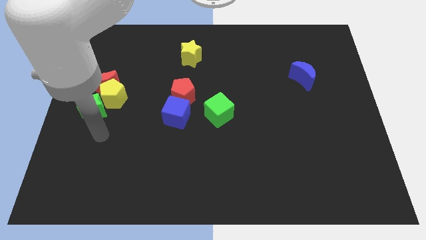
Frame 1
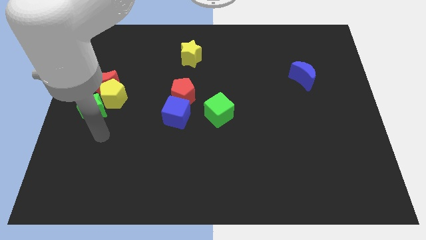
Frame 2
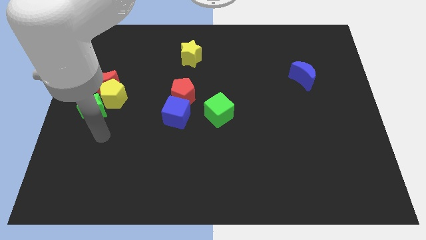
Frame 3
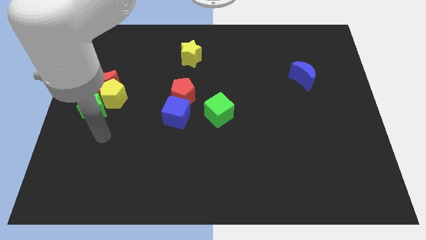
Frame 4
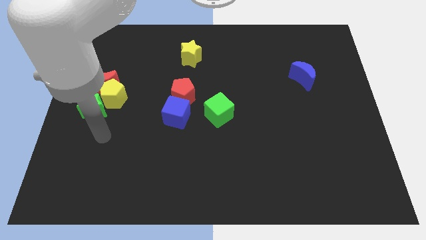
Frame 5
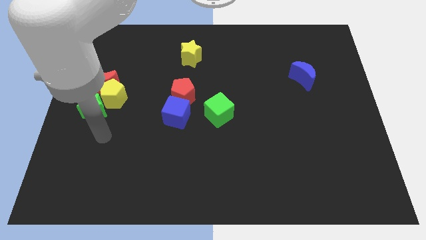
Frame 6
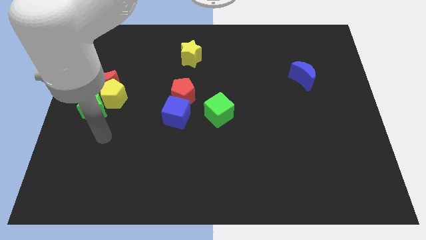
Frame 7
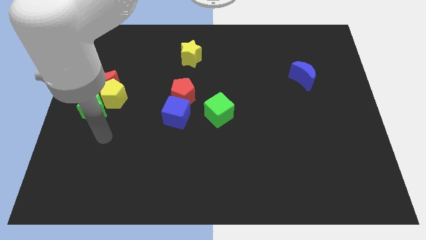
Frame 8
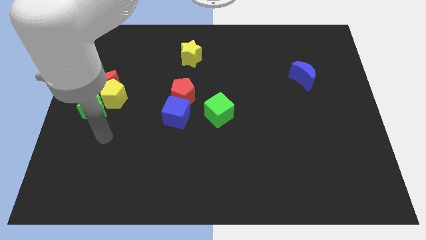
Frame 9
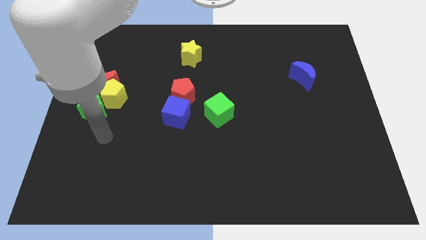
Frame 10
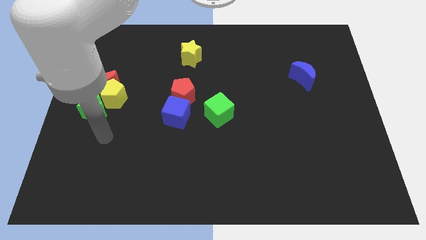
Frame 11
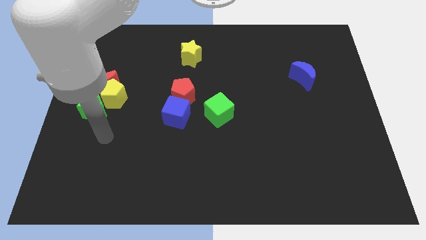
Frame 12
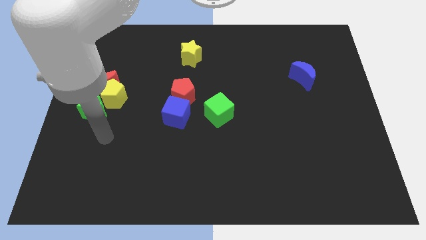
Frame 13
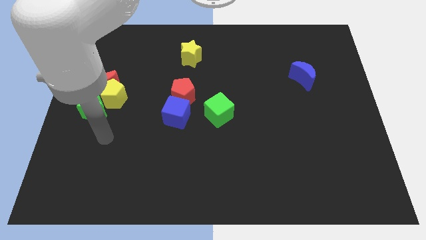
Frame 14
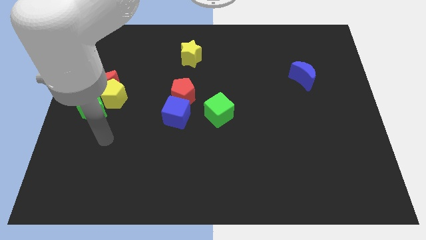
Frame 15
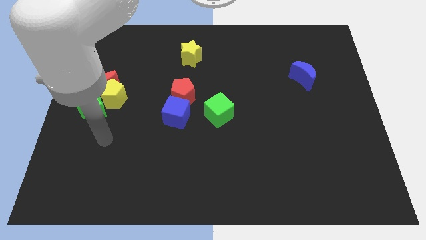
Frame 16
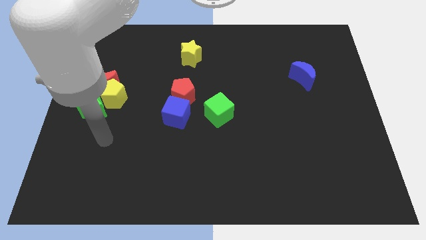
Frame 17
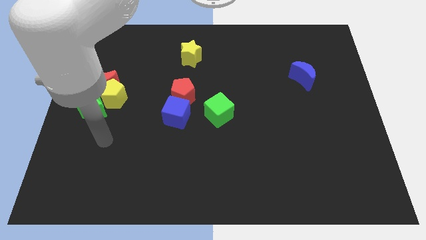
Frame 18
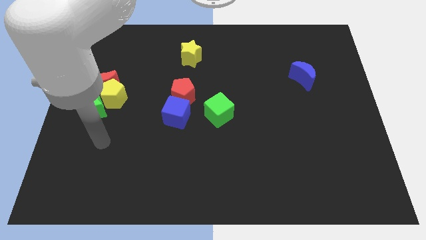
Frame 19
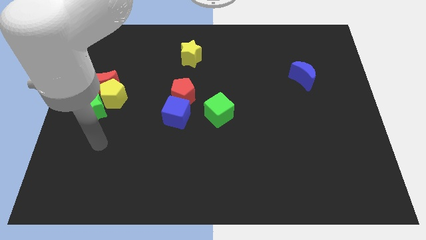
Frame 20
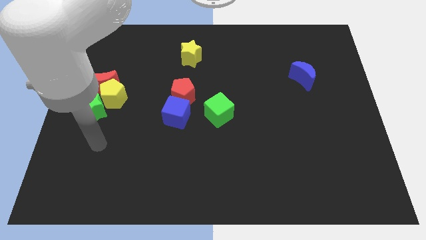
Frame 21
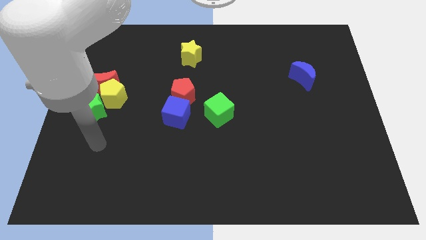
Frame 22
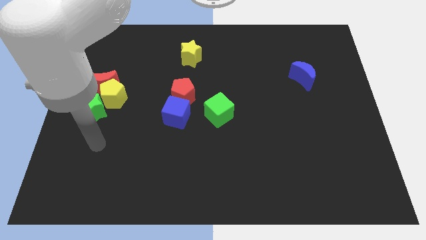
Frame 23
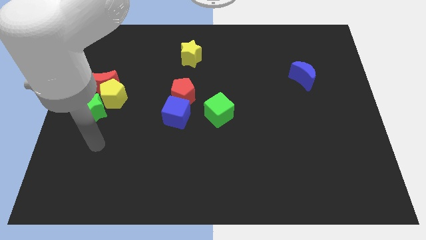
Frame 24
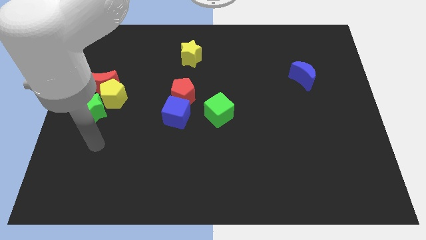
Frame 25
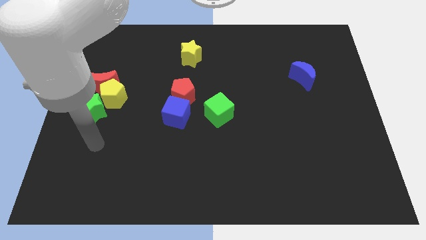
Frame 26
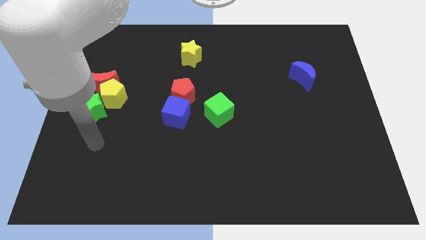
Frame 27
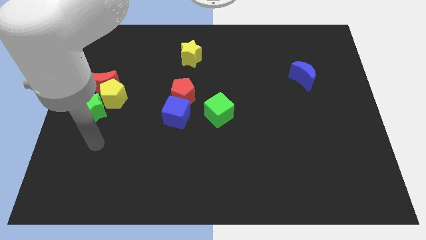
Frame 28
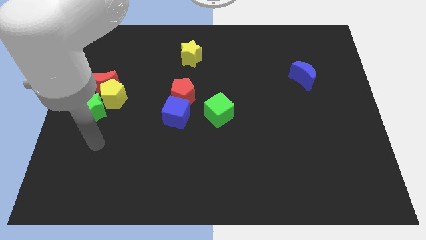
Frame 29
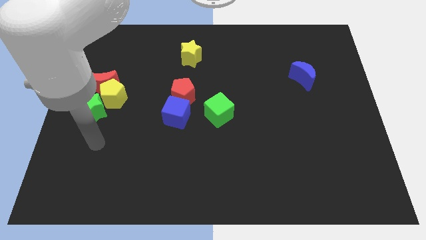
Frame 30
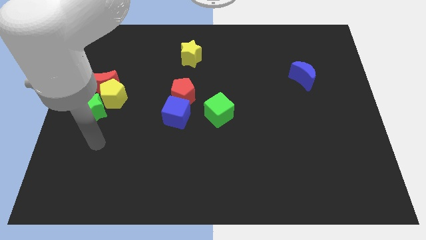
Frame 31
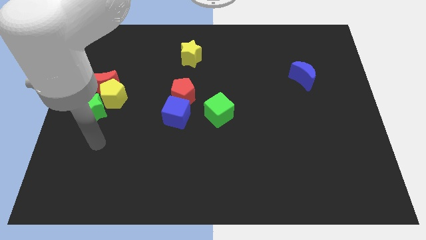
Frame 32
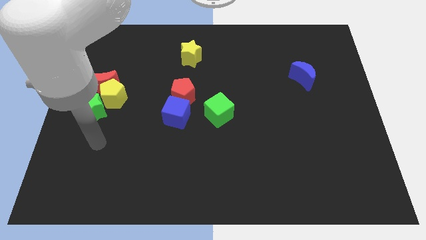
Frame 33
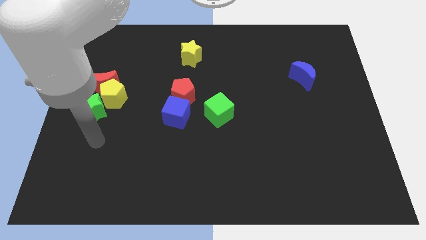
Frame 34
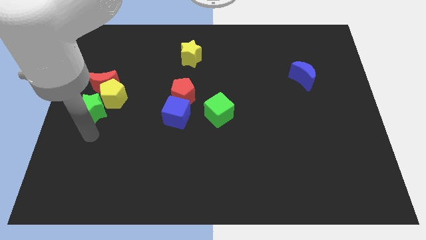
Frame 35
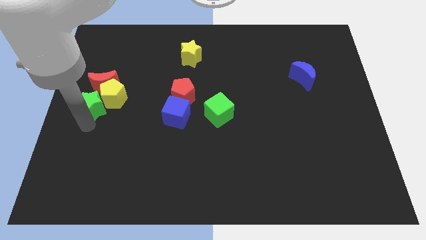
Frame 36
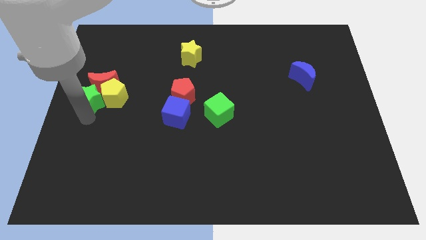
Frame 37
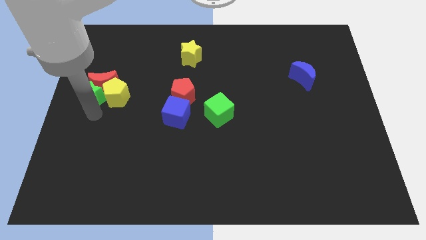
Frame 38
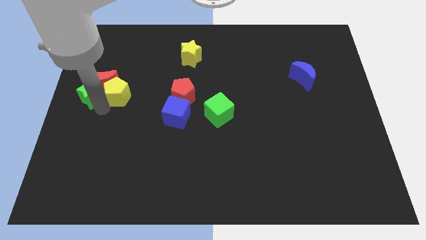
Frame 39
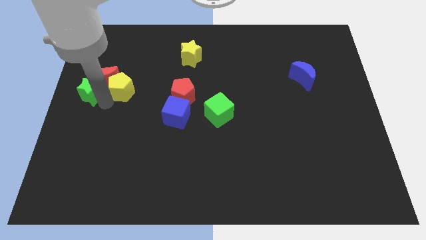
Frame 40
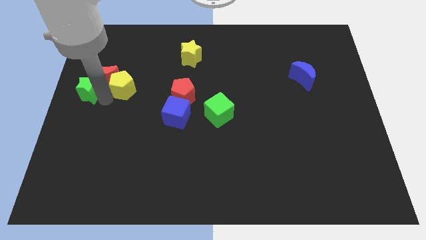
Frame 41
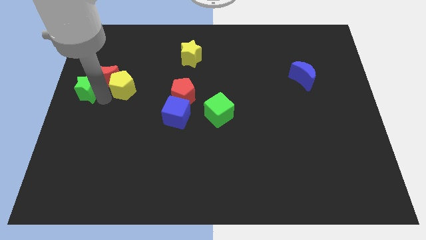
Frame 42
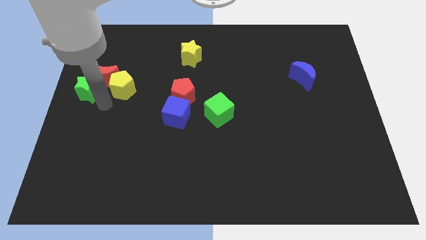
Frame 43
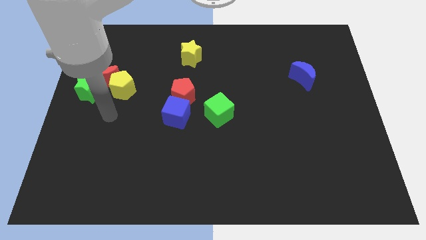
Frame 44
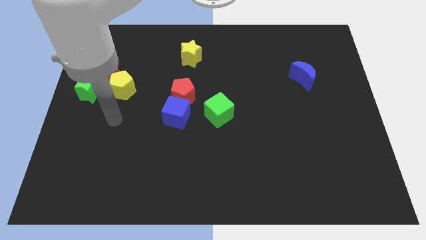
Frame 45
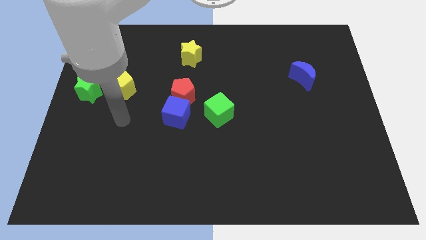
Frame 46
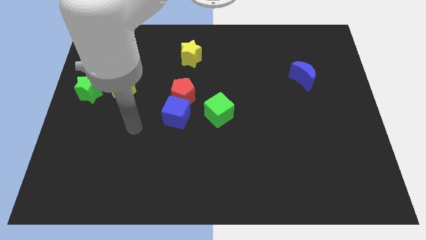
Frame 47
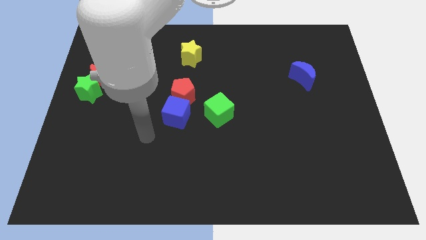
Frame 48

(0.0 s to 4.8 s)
move the green star to the left of the yellow star

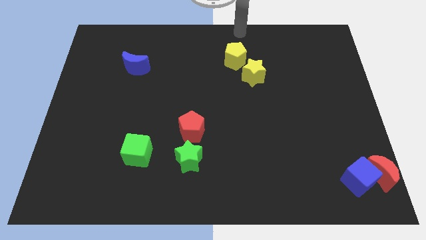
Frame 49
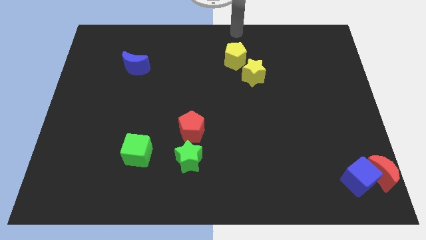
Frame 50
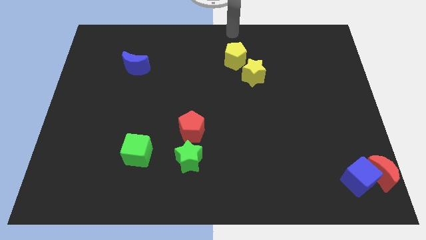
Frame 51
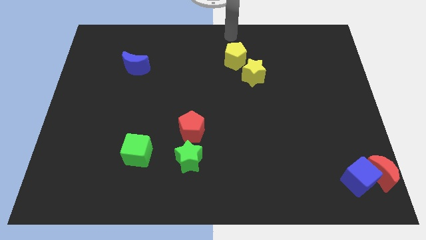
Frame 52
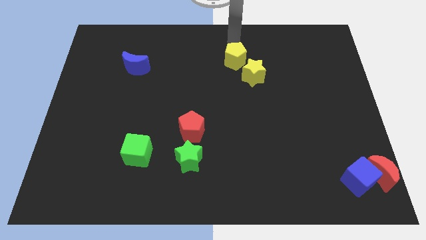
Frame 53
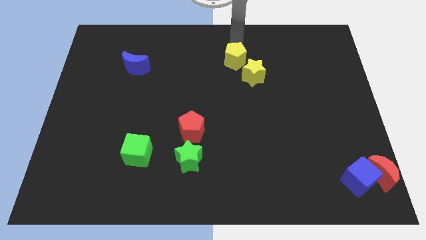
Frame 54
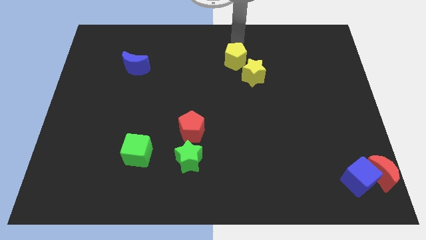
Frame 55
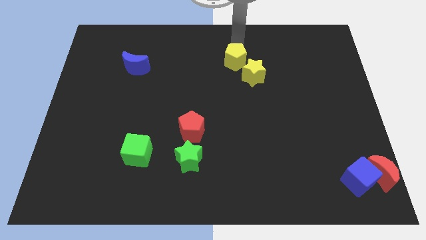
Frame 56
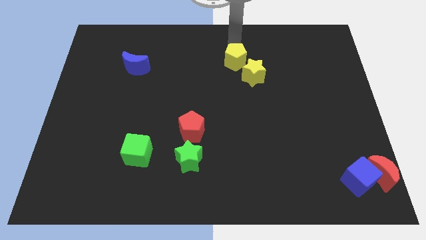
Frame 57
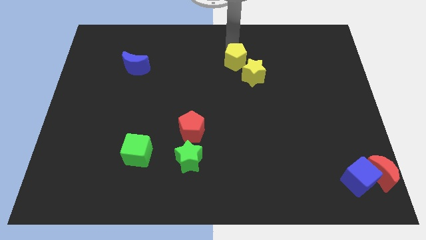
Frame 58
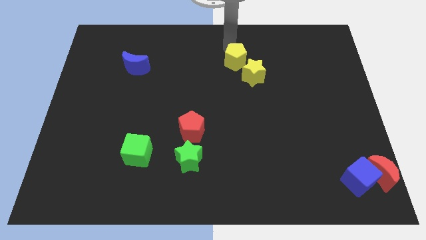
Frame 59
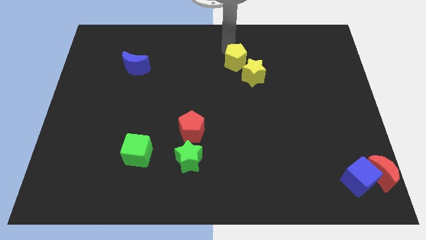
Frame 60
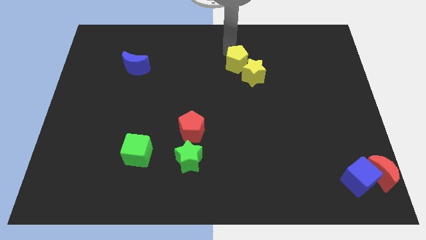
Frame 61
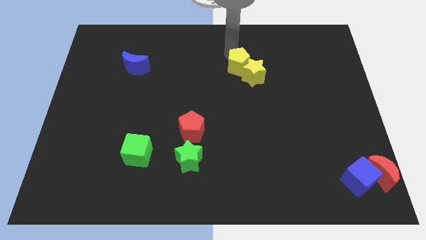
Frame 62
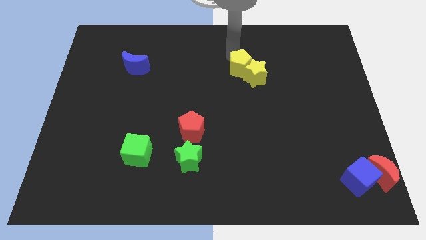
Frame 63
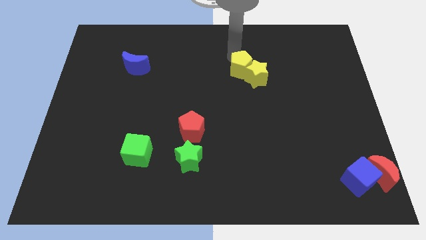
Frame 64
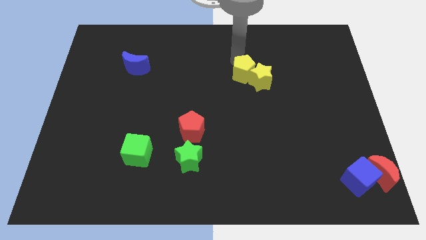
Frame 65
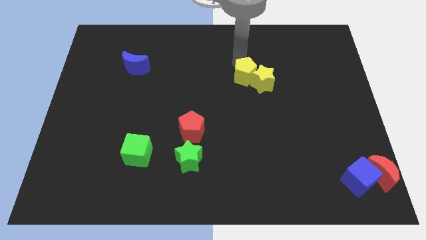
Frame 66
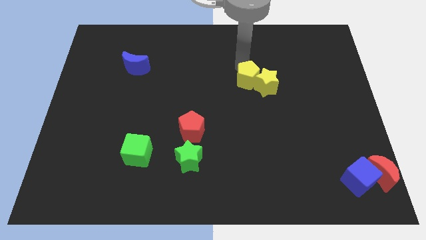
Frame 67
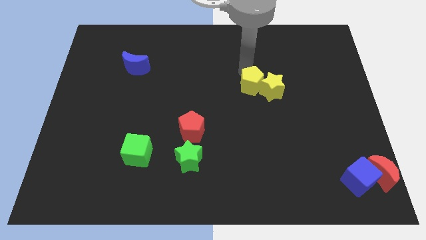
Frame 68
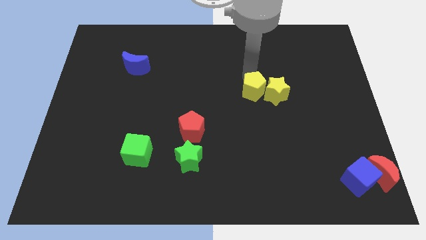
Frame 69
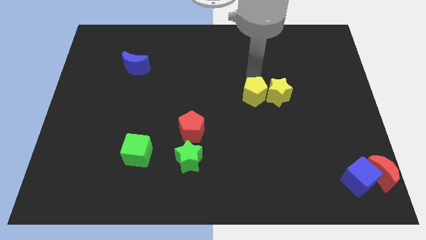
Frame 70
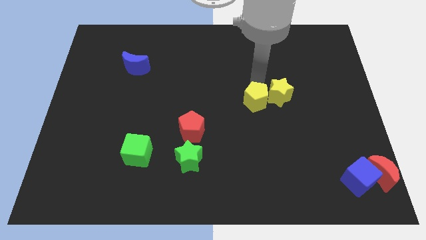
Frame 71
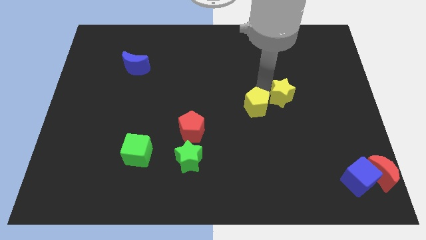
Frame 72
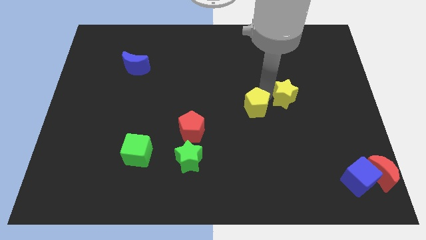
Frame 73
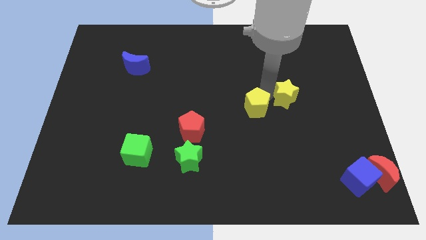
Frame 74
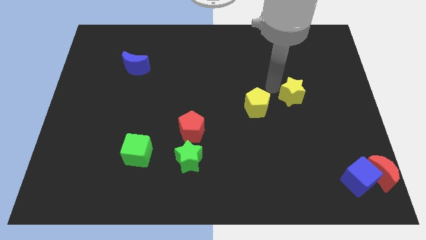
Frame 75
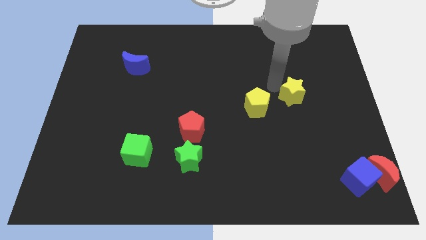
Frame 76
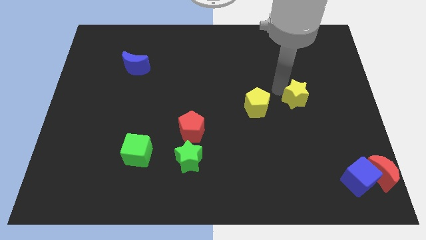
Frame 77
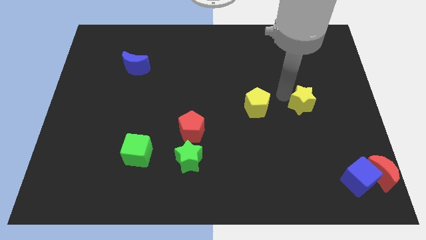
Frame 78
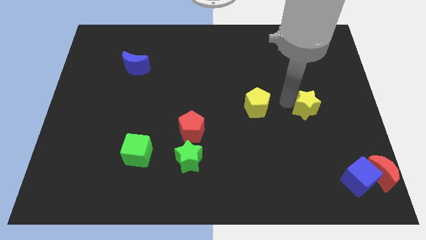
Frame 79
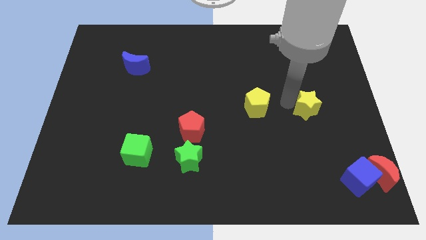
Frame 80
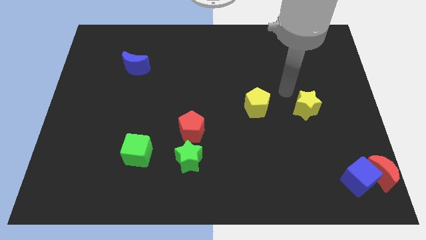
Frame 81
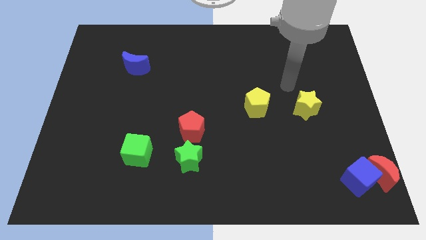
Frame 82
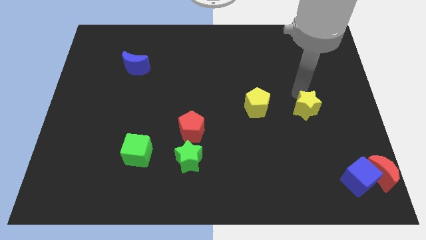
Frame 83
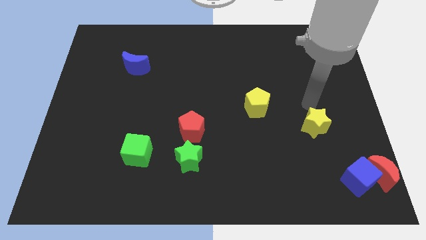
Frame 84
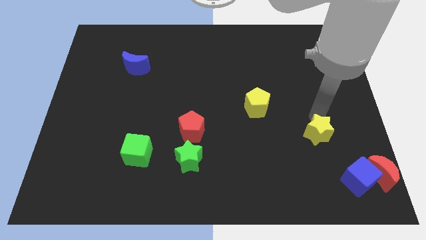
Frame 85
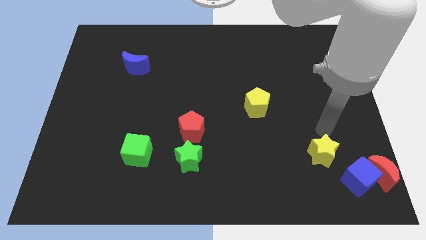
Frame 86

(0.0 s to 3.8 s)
separate both yellow pentagon and yellow star

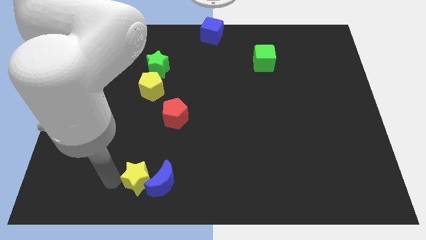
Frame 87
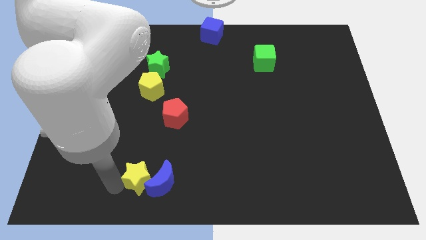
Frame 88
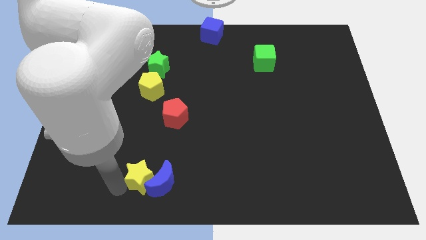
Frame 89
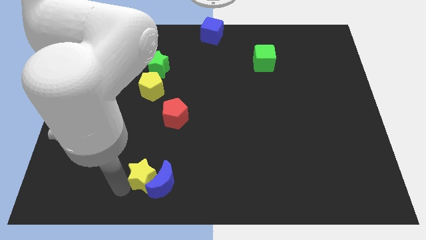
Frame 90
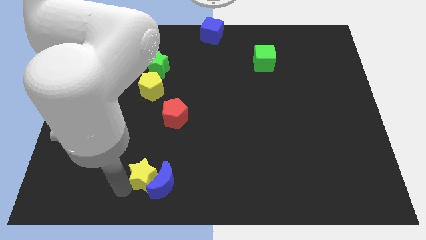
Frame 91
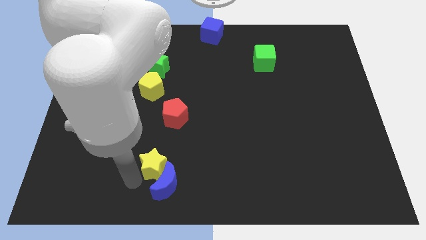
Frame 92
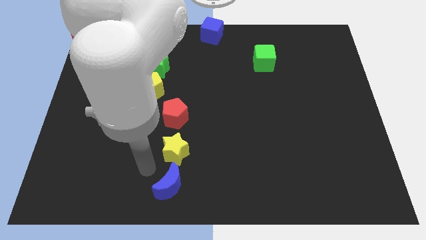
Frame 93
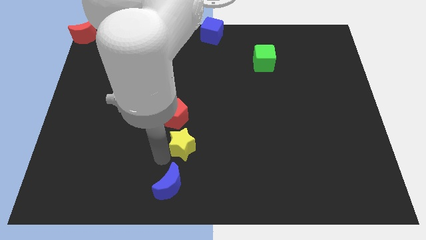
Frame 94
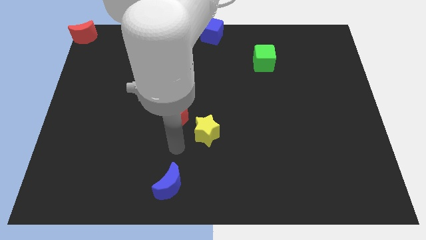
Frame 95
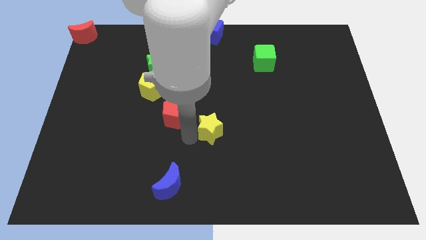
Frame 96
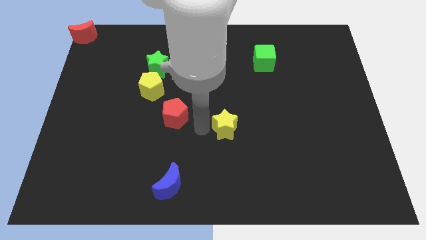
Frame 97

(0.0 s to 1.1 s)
separate yellow star from blue moon
